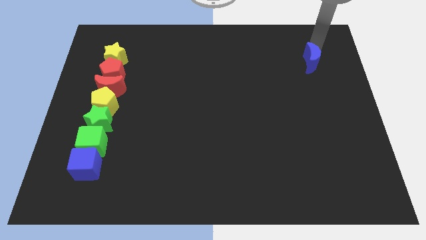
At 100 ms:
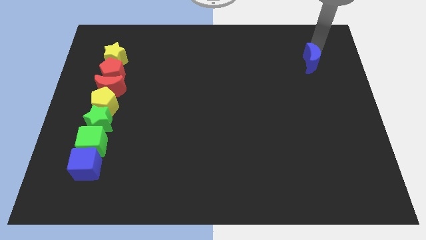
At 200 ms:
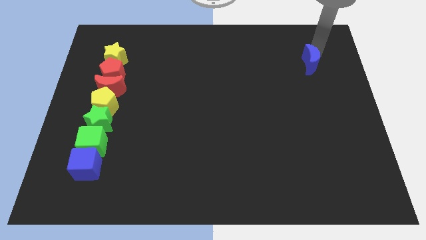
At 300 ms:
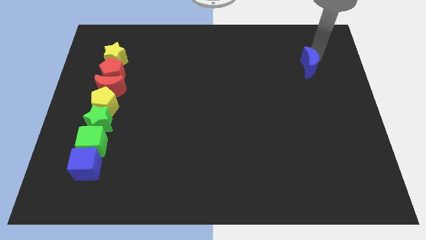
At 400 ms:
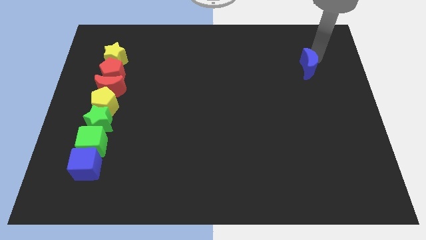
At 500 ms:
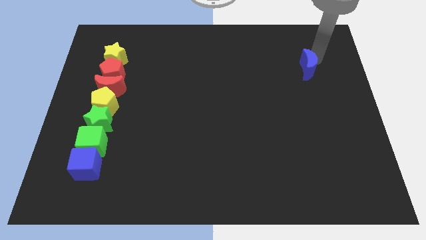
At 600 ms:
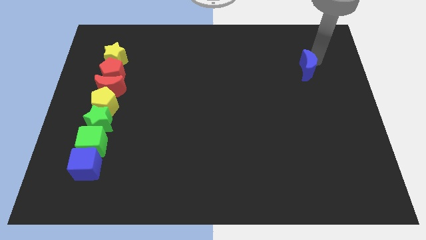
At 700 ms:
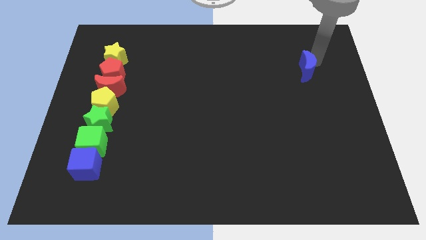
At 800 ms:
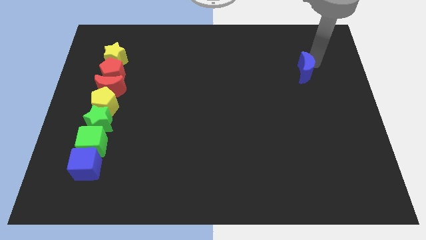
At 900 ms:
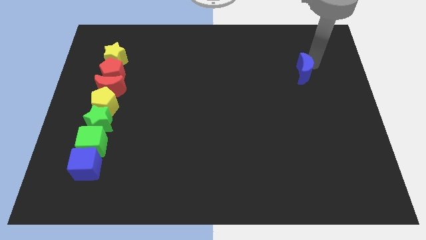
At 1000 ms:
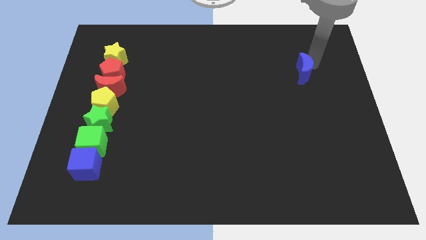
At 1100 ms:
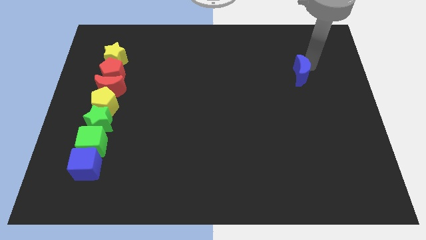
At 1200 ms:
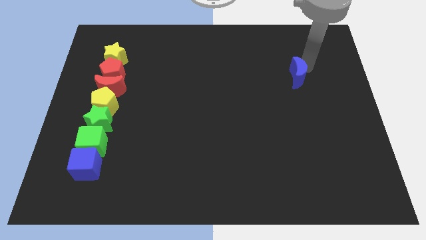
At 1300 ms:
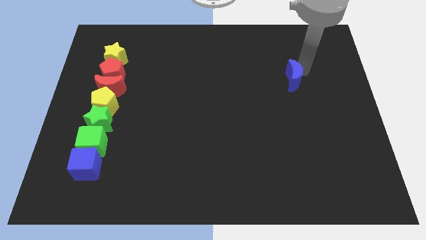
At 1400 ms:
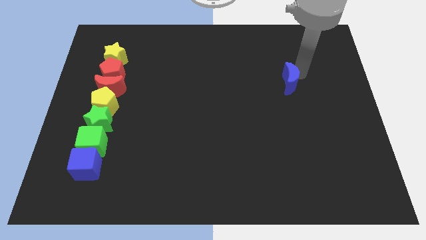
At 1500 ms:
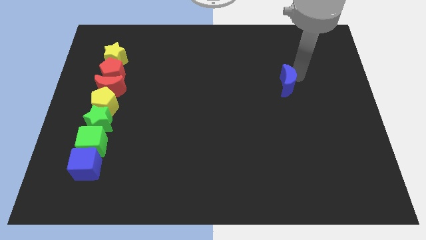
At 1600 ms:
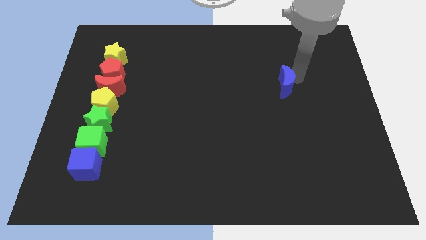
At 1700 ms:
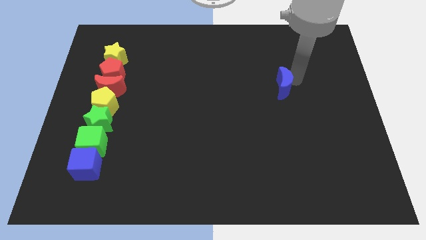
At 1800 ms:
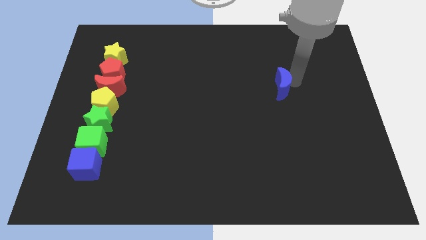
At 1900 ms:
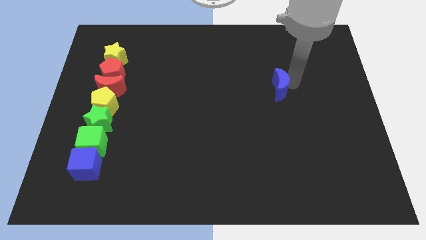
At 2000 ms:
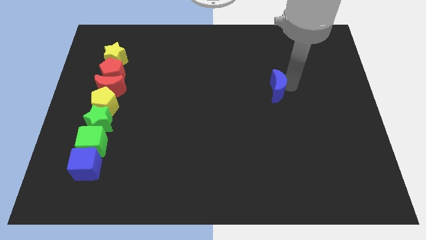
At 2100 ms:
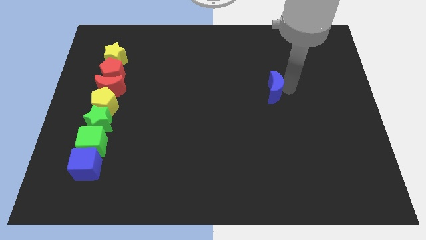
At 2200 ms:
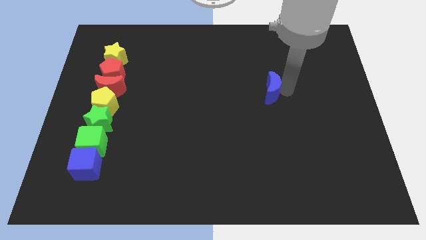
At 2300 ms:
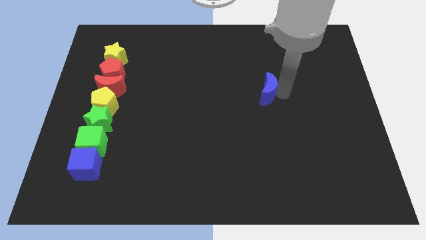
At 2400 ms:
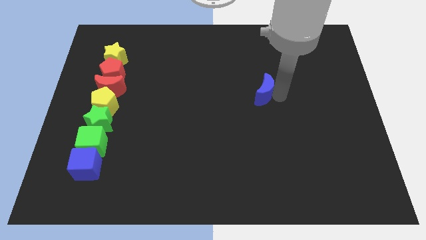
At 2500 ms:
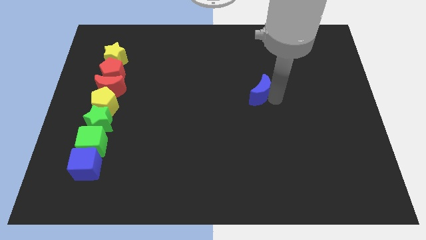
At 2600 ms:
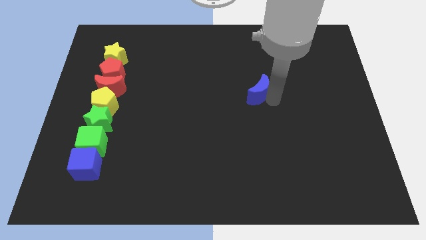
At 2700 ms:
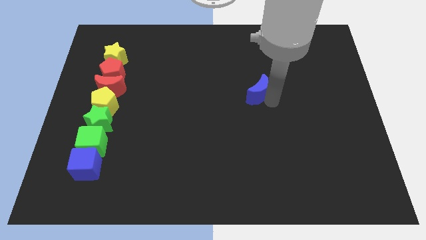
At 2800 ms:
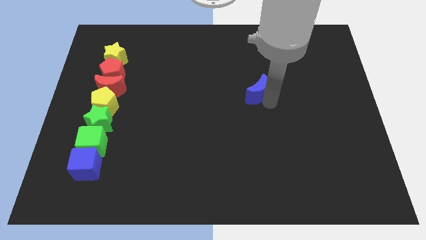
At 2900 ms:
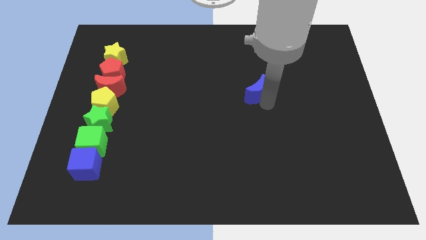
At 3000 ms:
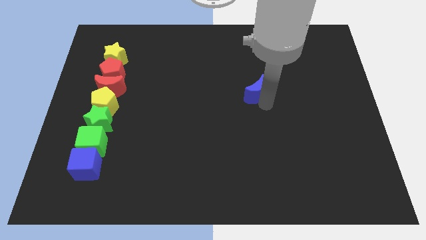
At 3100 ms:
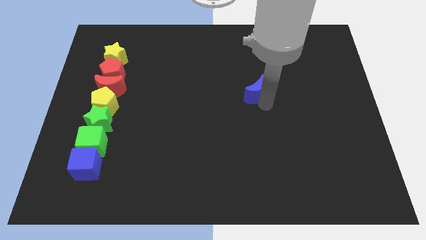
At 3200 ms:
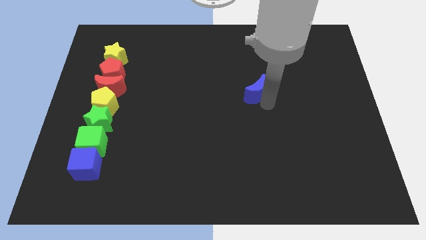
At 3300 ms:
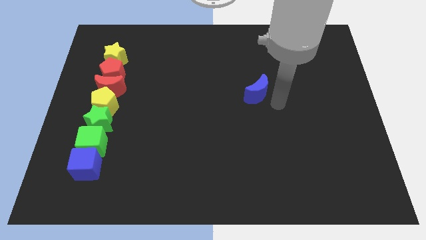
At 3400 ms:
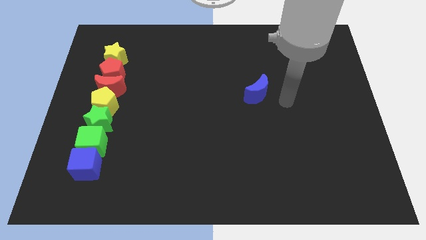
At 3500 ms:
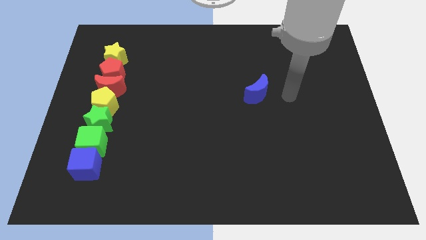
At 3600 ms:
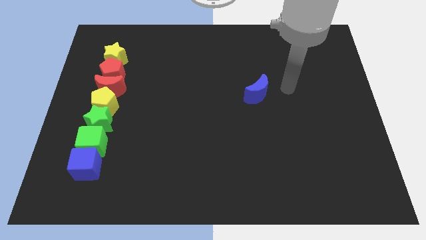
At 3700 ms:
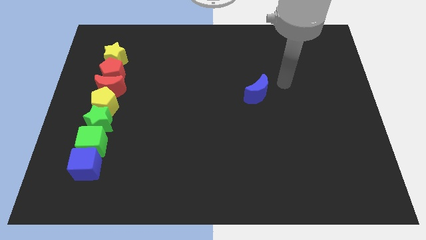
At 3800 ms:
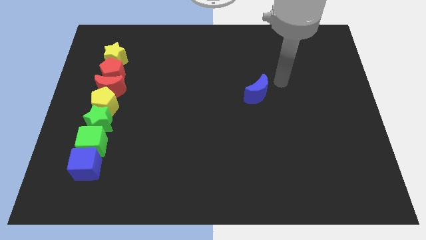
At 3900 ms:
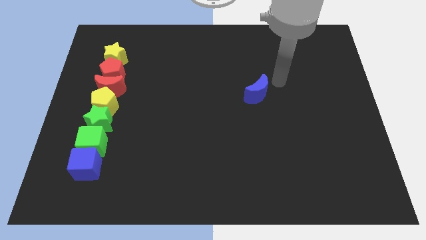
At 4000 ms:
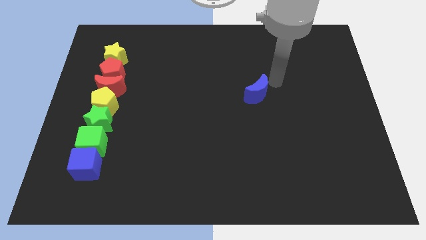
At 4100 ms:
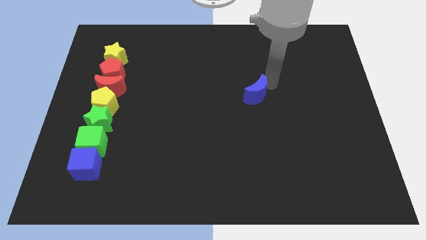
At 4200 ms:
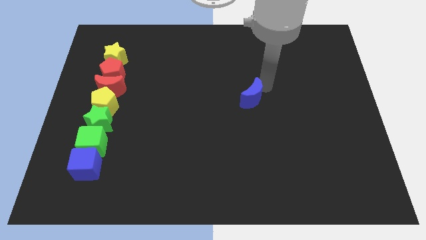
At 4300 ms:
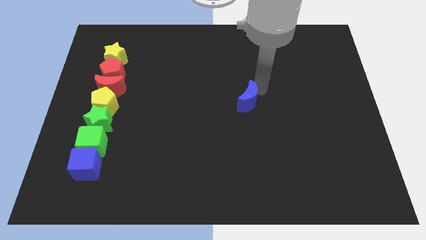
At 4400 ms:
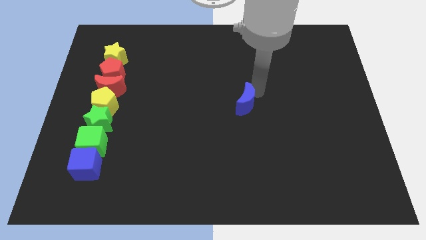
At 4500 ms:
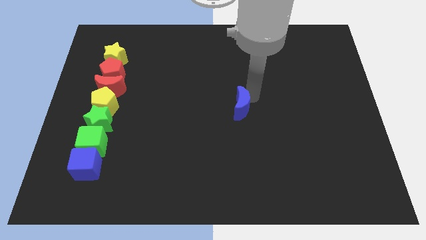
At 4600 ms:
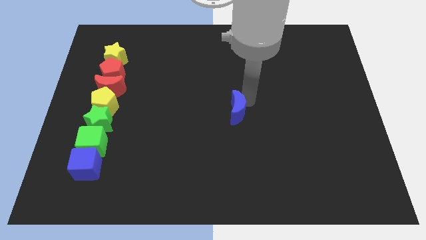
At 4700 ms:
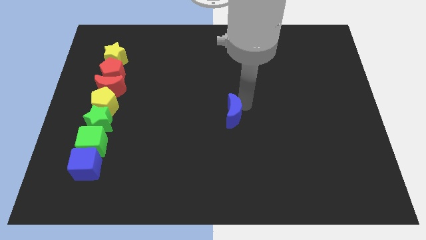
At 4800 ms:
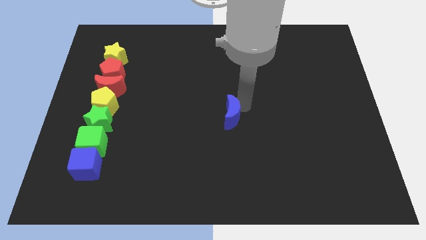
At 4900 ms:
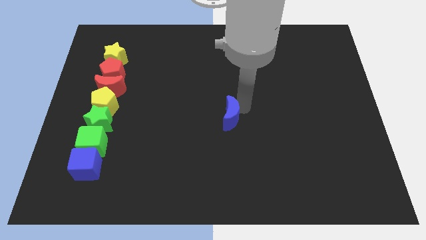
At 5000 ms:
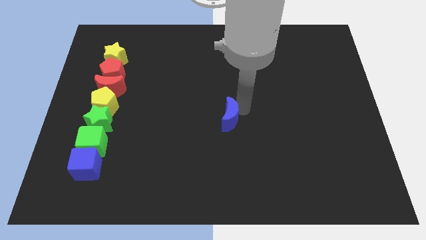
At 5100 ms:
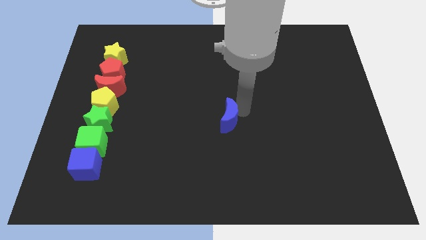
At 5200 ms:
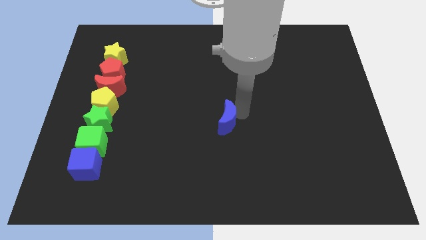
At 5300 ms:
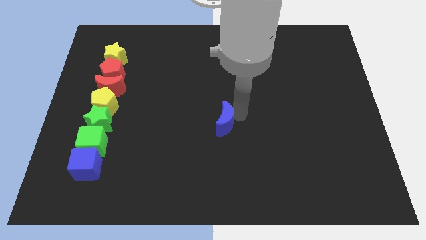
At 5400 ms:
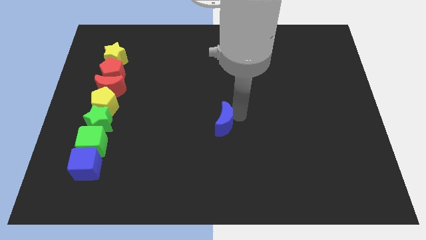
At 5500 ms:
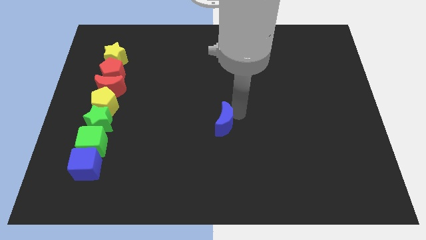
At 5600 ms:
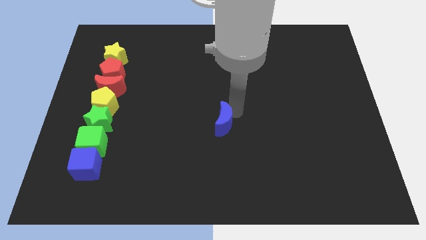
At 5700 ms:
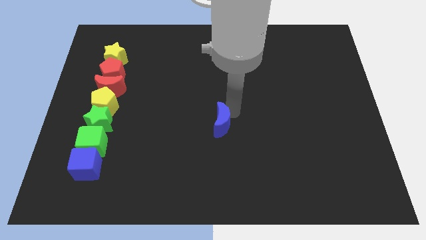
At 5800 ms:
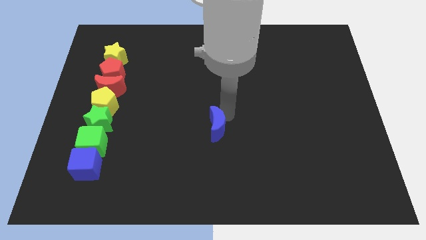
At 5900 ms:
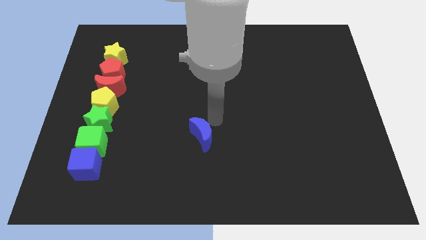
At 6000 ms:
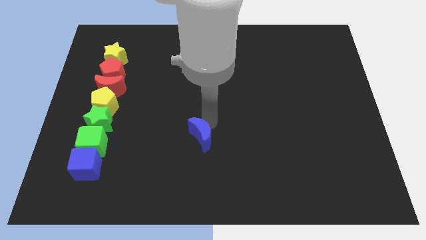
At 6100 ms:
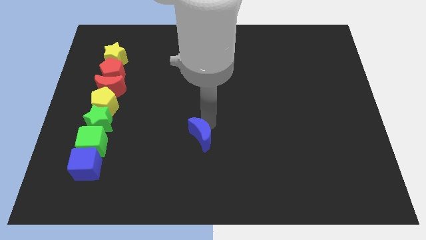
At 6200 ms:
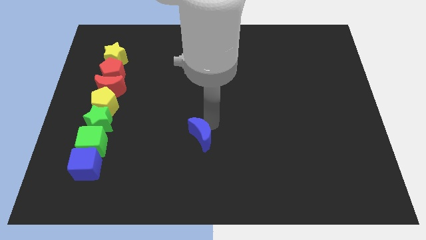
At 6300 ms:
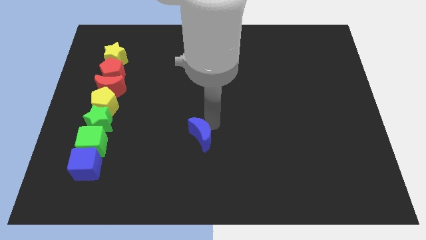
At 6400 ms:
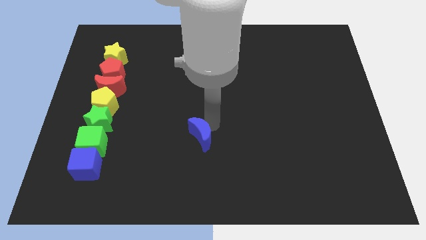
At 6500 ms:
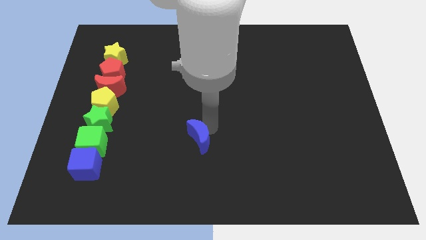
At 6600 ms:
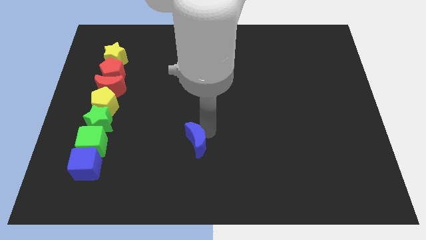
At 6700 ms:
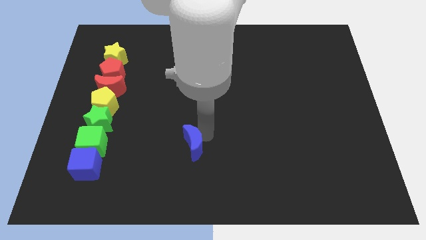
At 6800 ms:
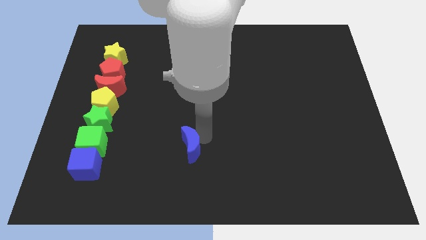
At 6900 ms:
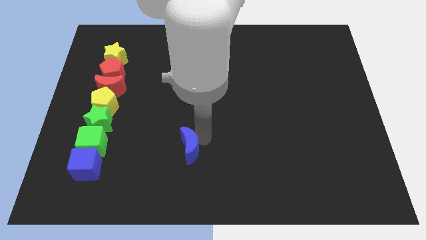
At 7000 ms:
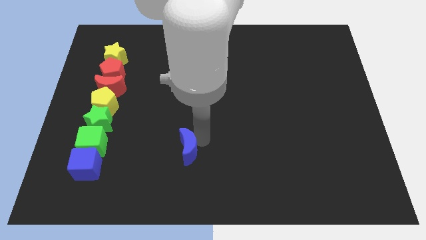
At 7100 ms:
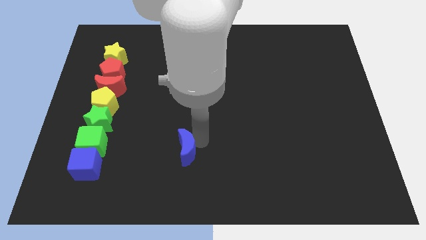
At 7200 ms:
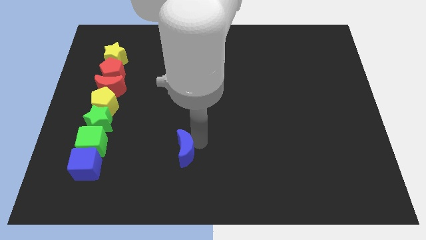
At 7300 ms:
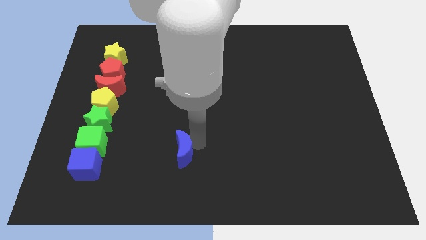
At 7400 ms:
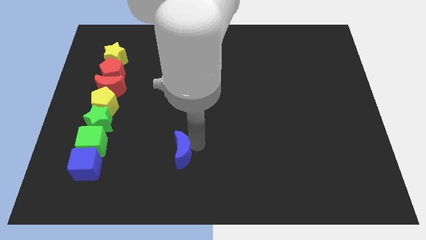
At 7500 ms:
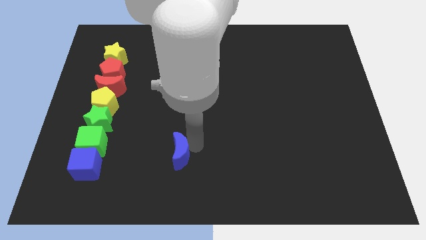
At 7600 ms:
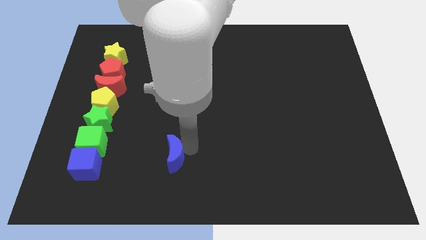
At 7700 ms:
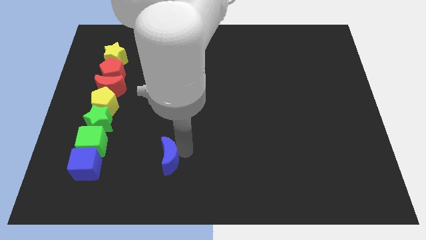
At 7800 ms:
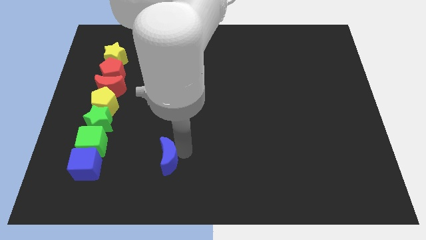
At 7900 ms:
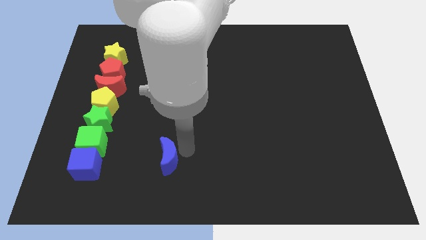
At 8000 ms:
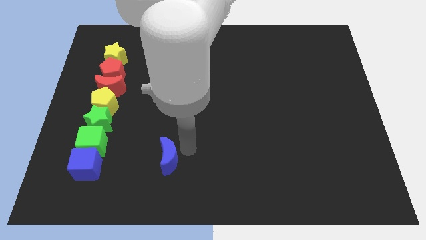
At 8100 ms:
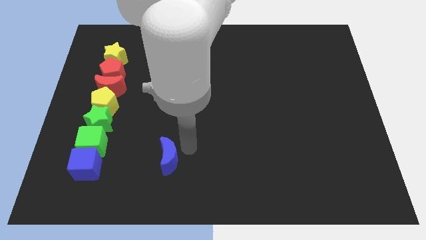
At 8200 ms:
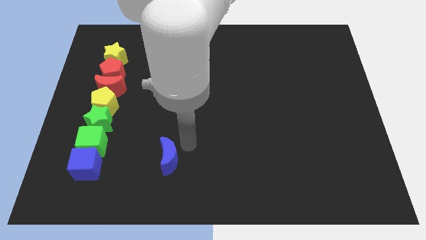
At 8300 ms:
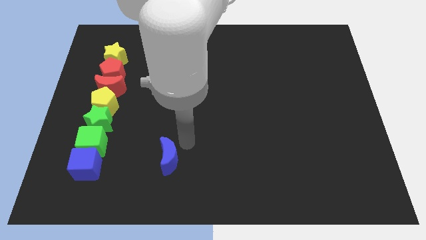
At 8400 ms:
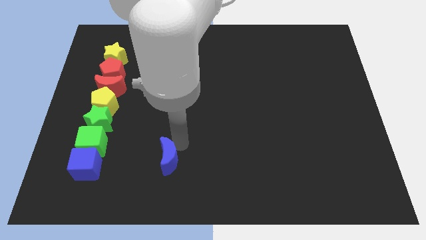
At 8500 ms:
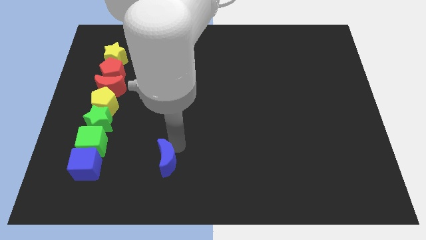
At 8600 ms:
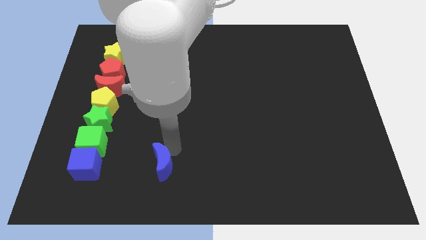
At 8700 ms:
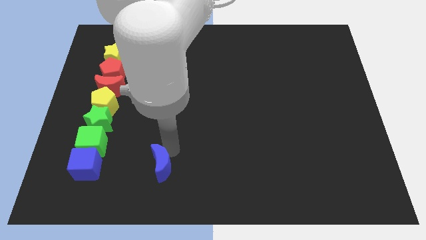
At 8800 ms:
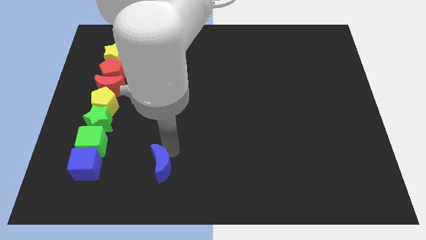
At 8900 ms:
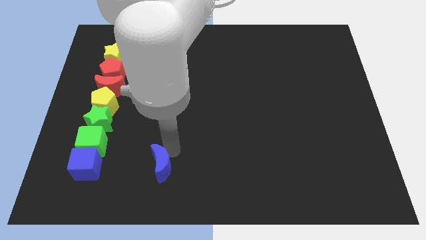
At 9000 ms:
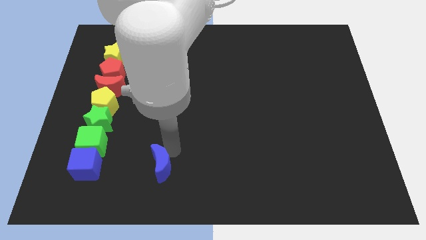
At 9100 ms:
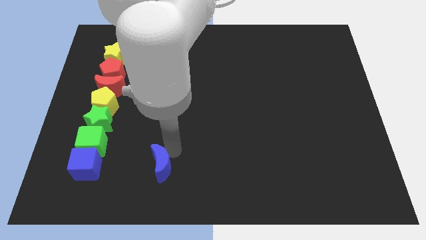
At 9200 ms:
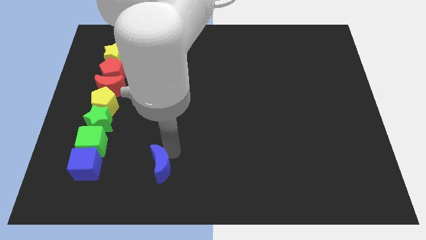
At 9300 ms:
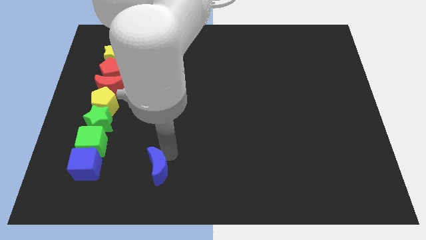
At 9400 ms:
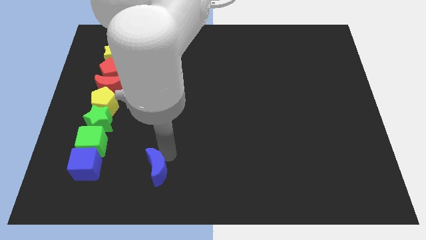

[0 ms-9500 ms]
drag the blue moon slightly downwards
